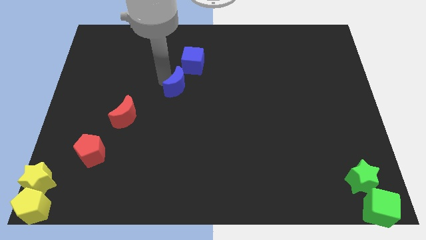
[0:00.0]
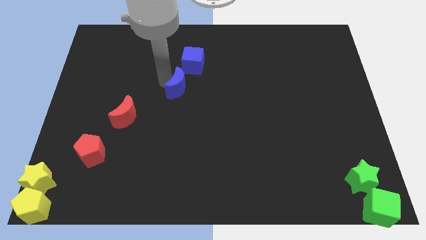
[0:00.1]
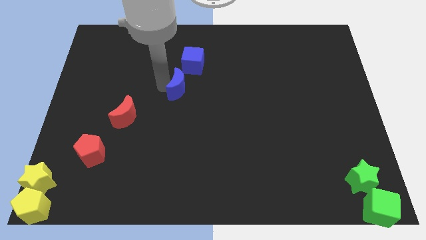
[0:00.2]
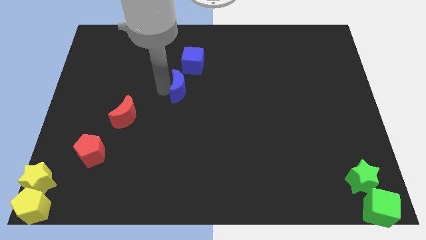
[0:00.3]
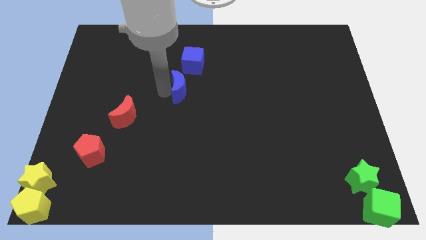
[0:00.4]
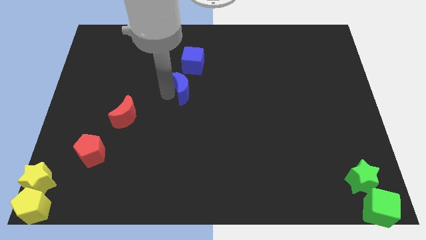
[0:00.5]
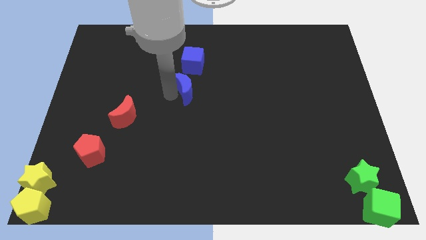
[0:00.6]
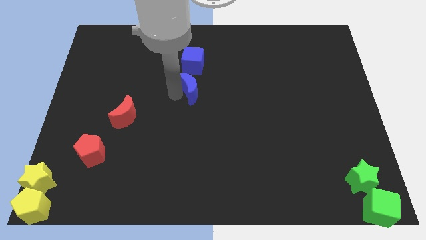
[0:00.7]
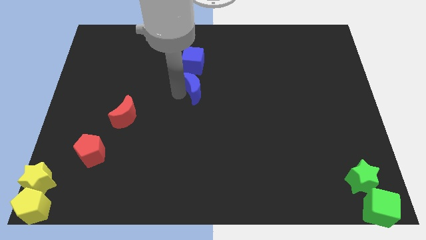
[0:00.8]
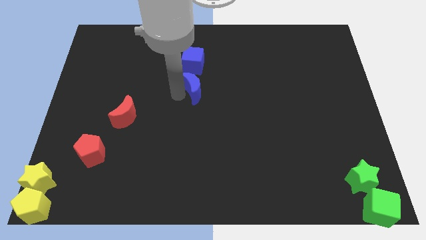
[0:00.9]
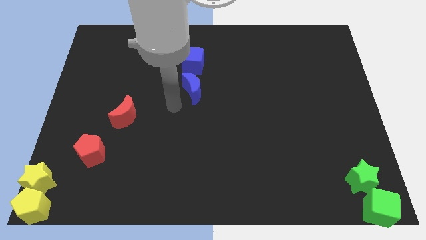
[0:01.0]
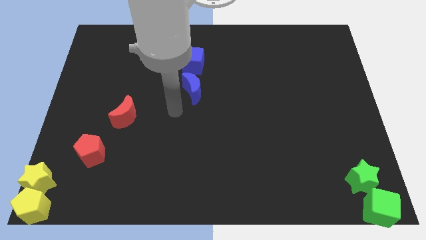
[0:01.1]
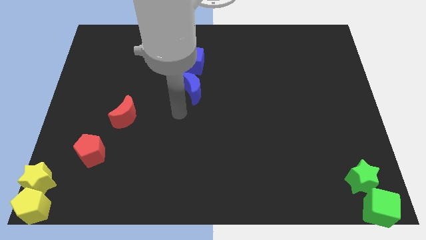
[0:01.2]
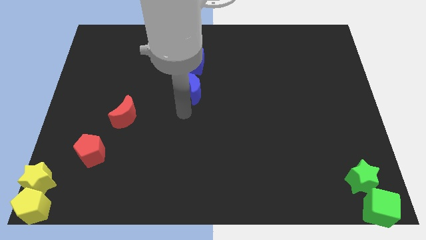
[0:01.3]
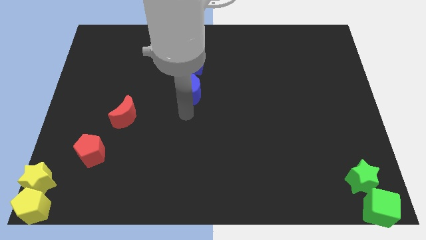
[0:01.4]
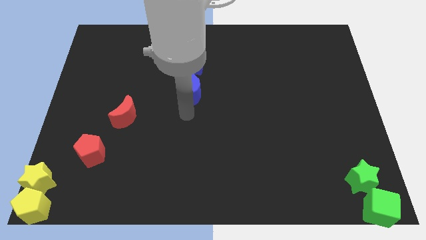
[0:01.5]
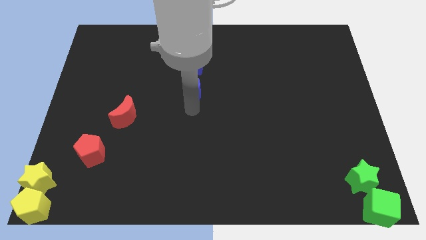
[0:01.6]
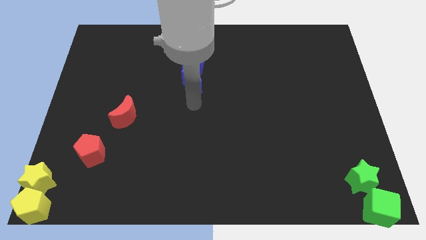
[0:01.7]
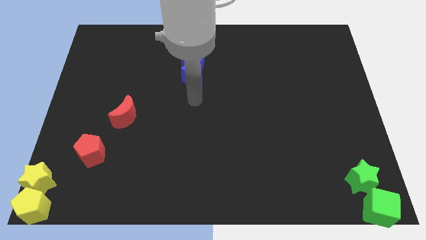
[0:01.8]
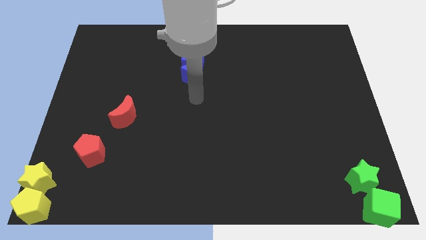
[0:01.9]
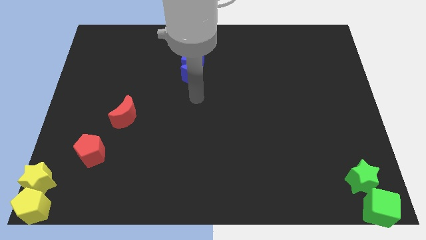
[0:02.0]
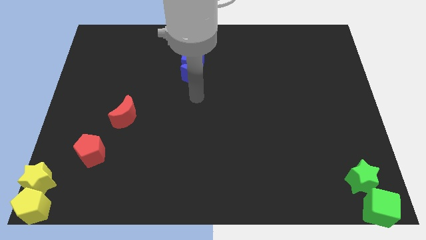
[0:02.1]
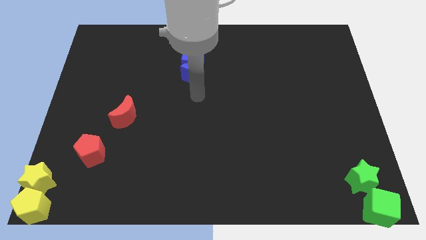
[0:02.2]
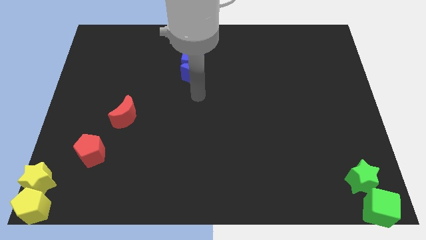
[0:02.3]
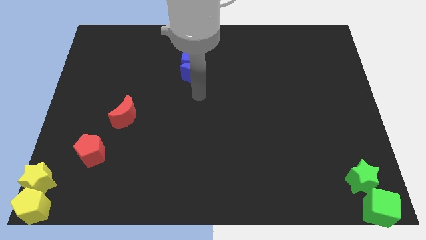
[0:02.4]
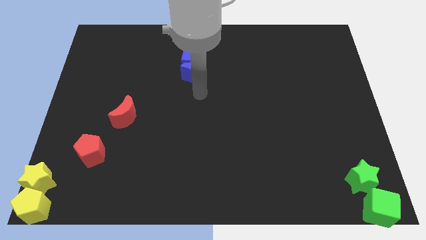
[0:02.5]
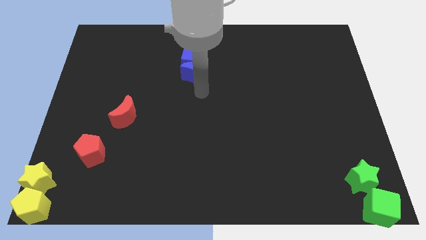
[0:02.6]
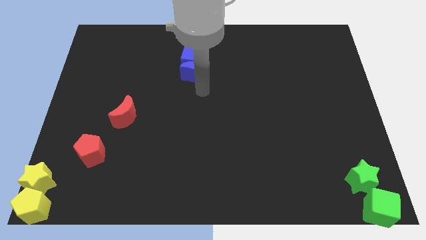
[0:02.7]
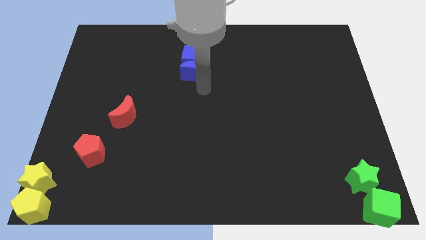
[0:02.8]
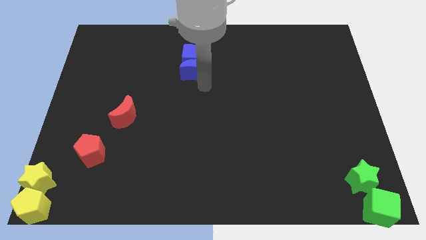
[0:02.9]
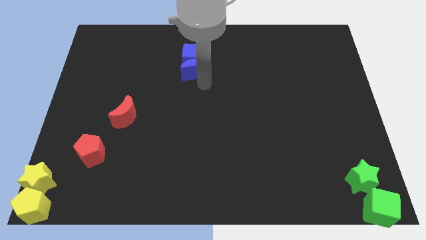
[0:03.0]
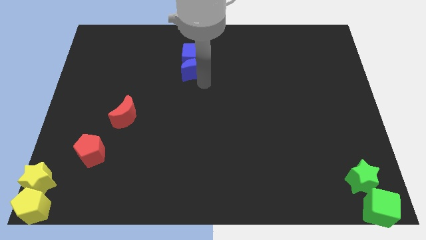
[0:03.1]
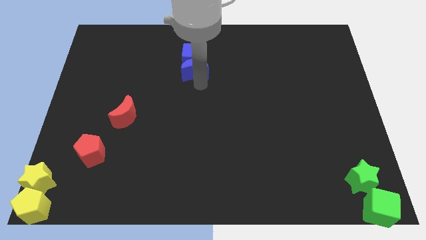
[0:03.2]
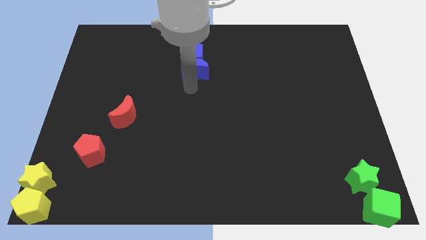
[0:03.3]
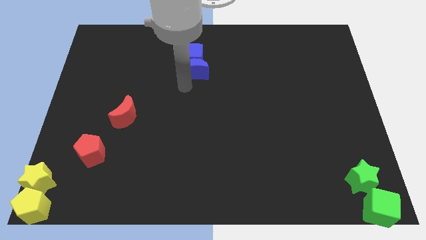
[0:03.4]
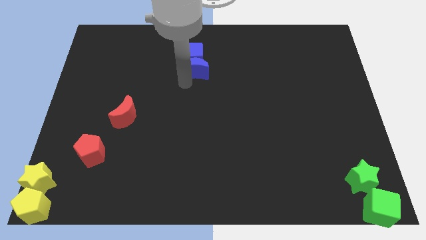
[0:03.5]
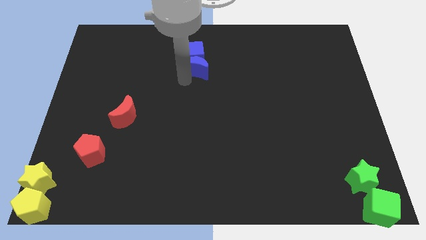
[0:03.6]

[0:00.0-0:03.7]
place the blue crescent into the blue cube at the top side

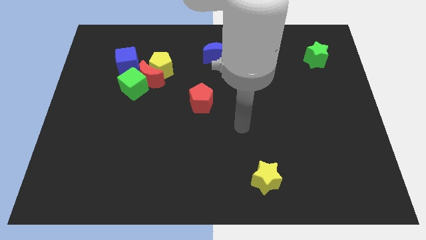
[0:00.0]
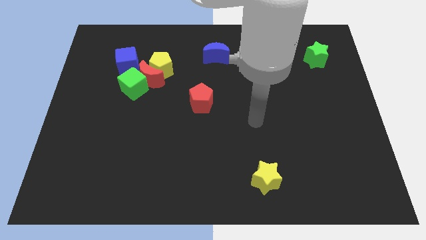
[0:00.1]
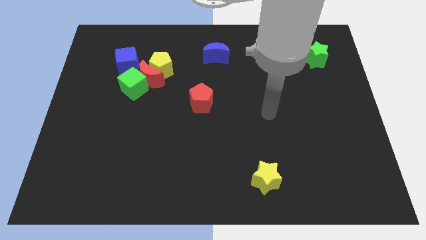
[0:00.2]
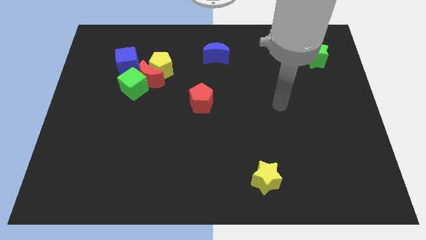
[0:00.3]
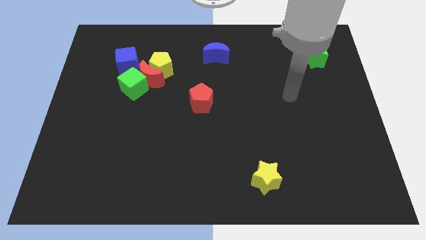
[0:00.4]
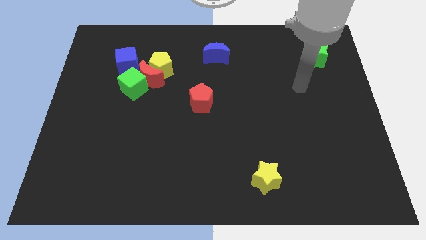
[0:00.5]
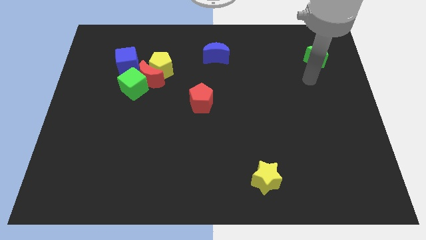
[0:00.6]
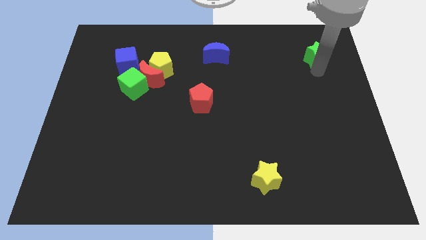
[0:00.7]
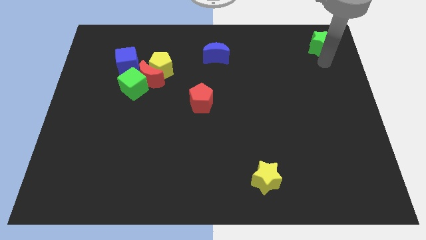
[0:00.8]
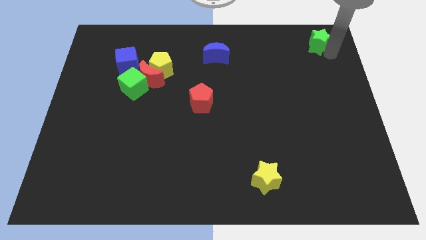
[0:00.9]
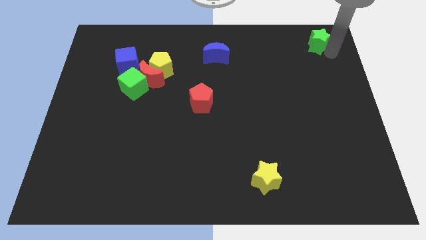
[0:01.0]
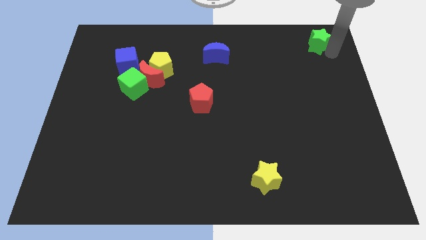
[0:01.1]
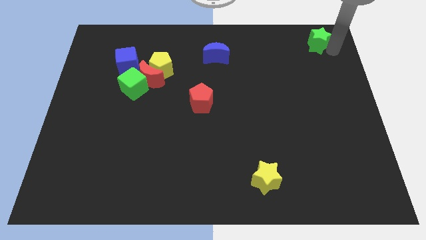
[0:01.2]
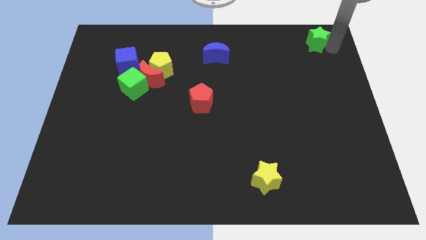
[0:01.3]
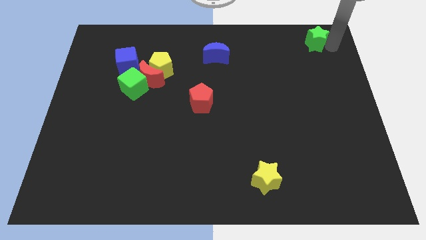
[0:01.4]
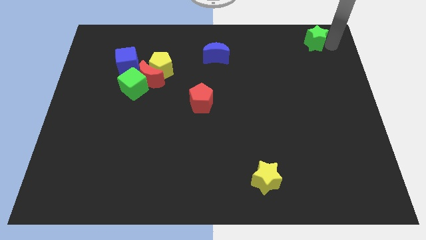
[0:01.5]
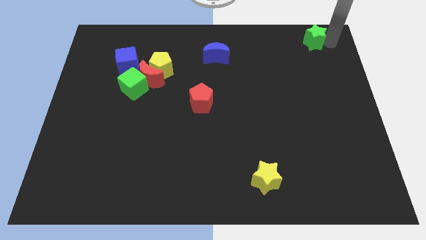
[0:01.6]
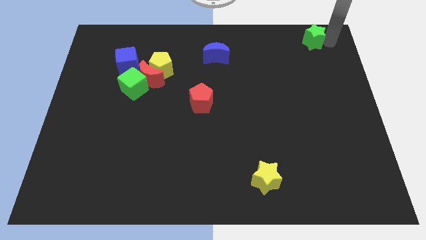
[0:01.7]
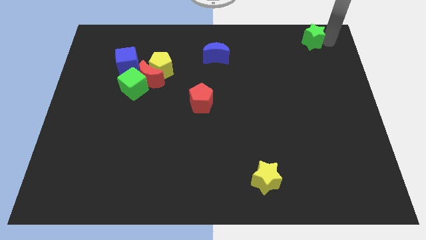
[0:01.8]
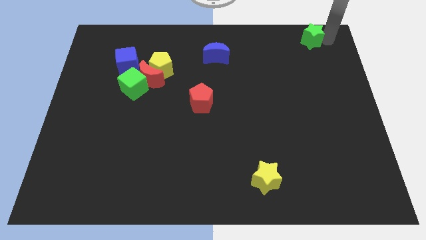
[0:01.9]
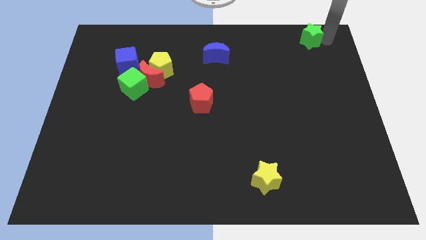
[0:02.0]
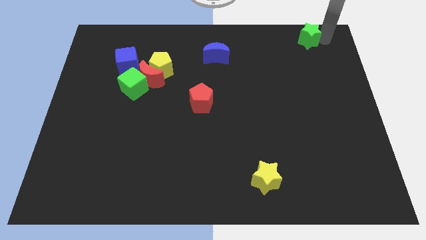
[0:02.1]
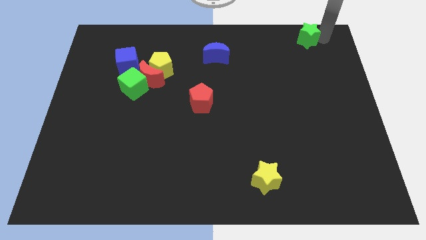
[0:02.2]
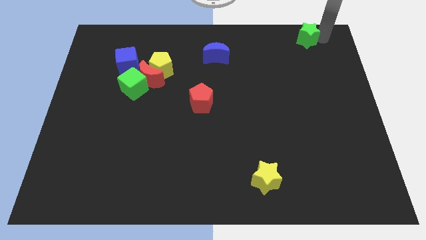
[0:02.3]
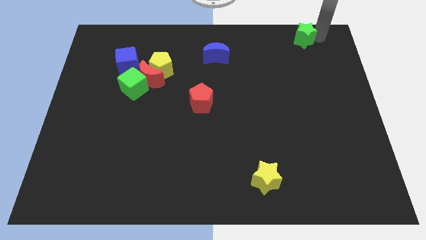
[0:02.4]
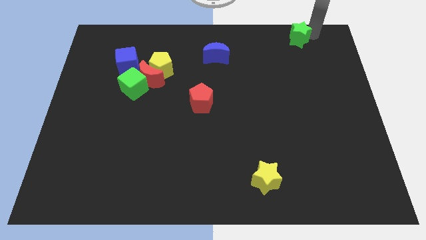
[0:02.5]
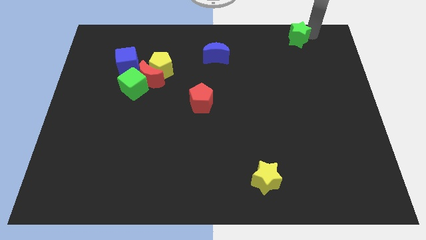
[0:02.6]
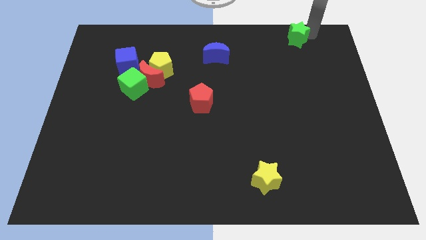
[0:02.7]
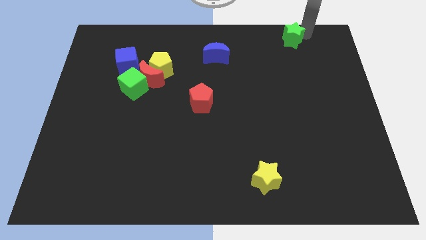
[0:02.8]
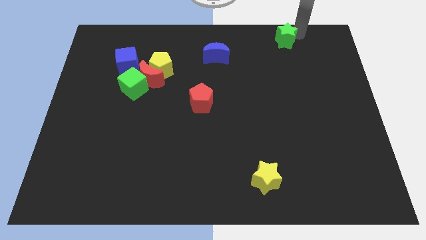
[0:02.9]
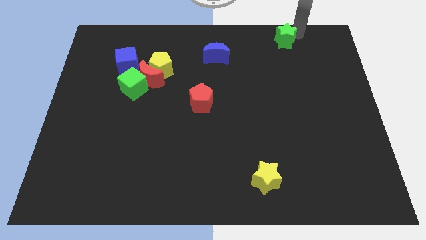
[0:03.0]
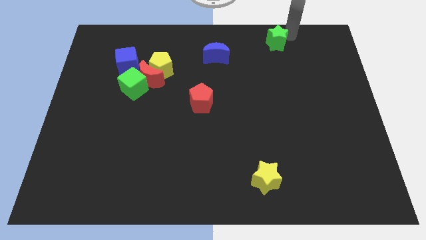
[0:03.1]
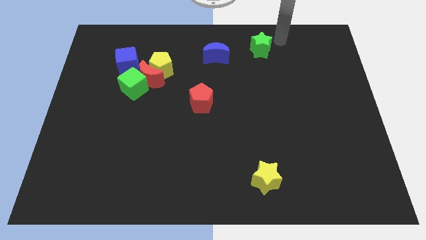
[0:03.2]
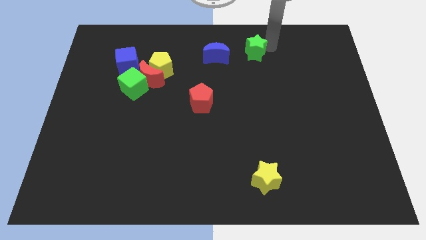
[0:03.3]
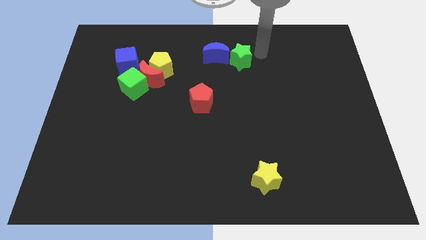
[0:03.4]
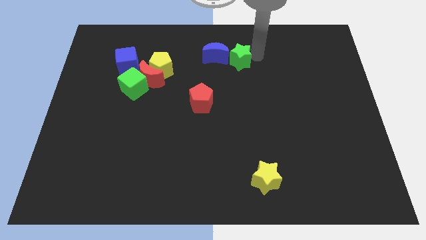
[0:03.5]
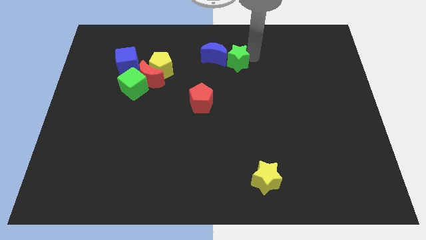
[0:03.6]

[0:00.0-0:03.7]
place the green star to the right side of blue moon

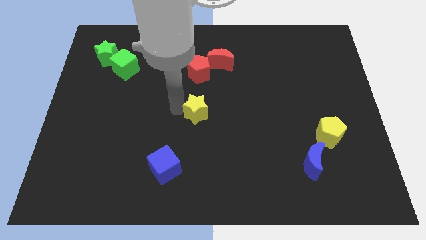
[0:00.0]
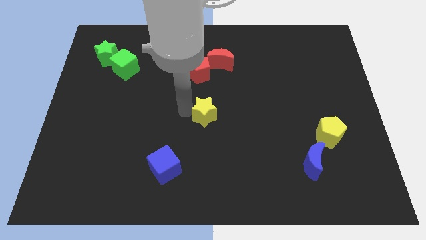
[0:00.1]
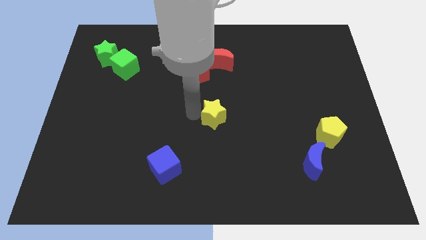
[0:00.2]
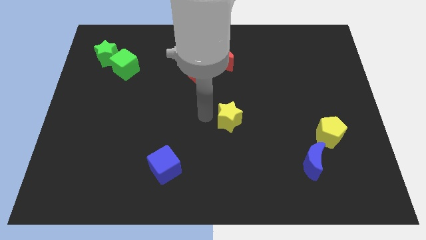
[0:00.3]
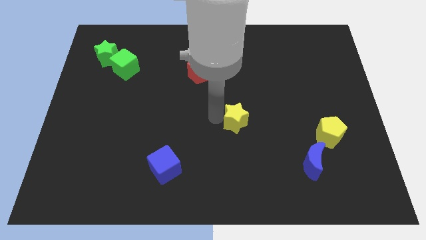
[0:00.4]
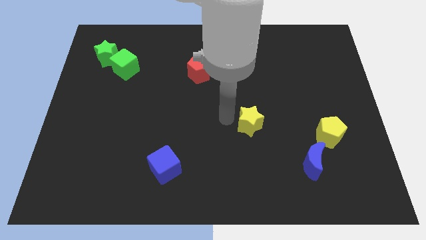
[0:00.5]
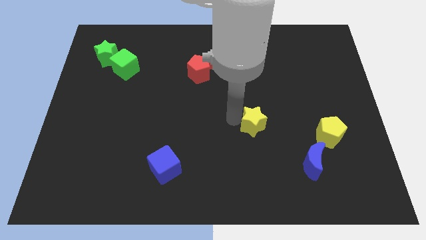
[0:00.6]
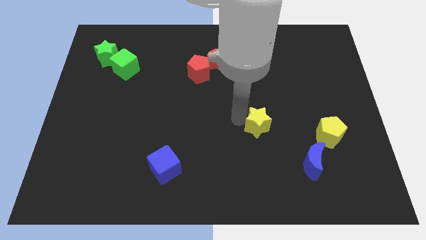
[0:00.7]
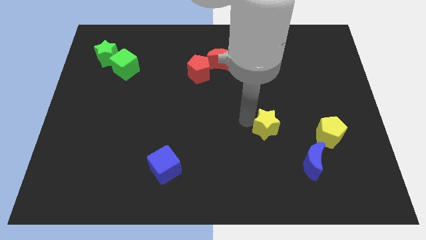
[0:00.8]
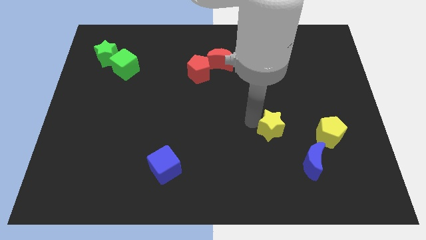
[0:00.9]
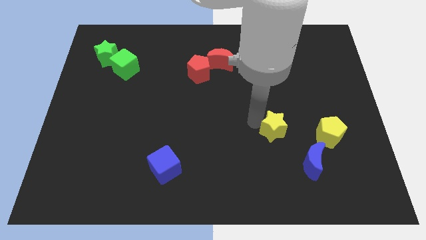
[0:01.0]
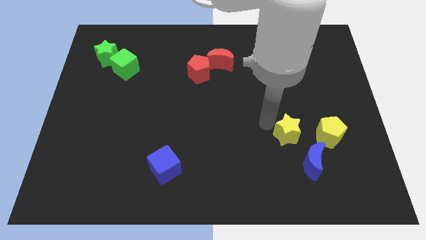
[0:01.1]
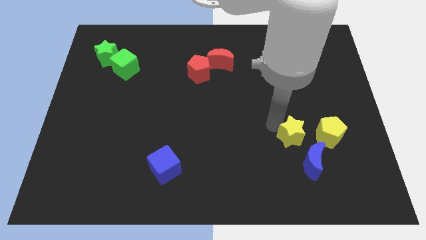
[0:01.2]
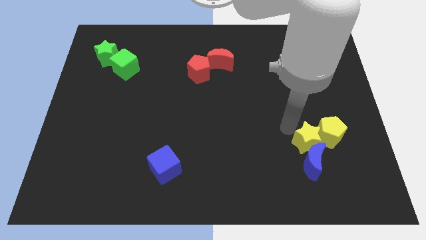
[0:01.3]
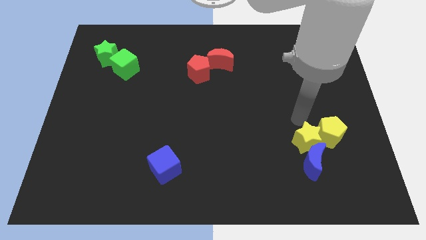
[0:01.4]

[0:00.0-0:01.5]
move yellow star into blue moon and yellow pentagon

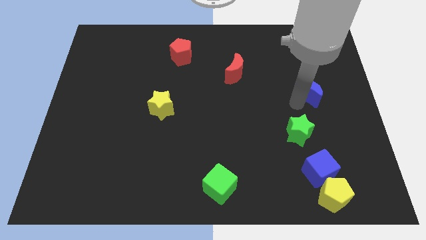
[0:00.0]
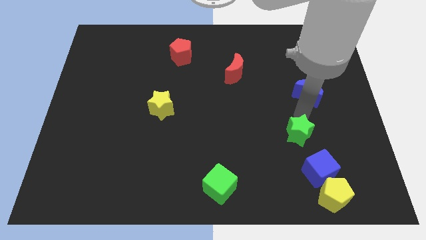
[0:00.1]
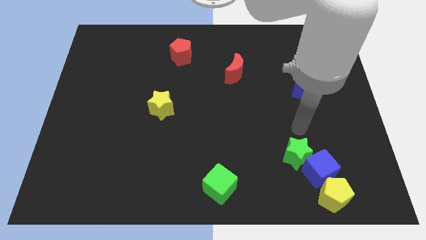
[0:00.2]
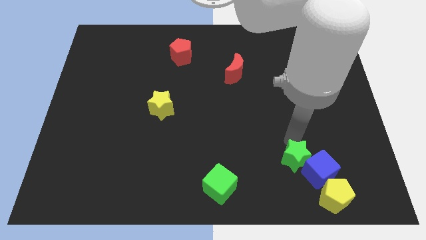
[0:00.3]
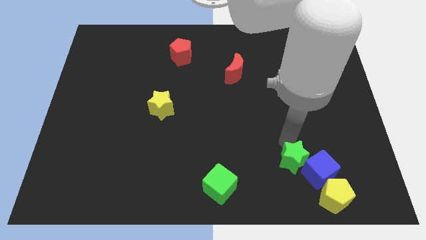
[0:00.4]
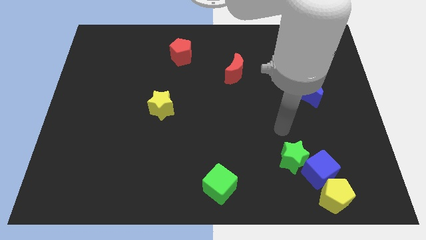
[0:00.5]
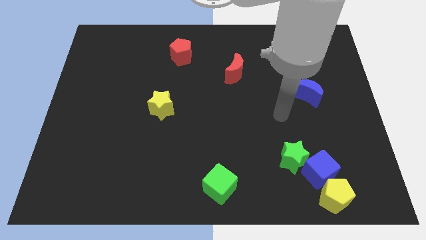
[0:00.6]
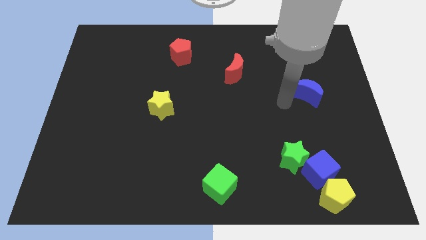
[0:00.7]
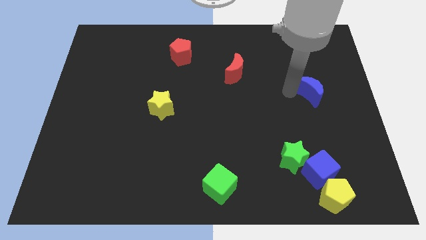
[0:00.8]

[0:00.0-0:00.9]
touch the green star
